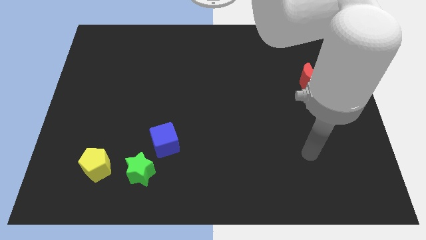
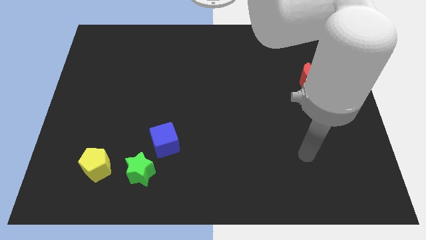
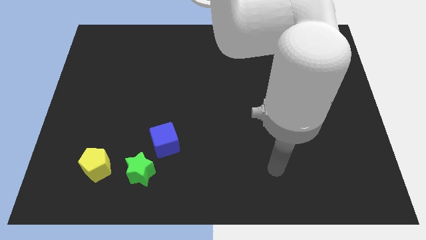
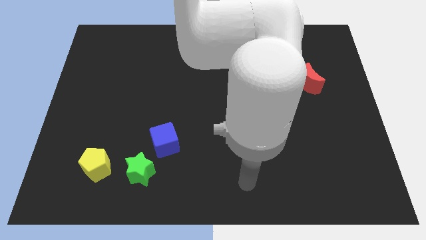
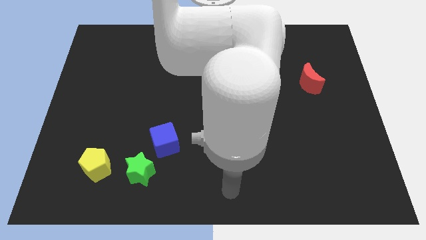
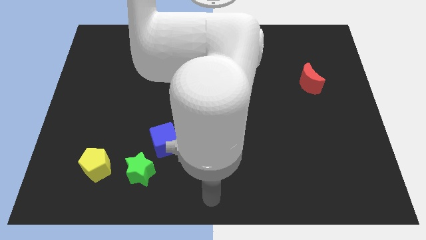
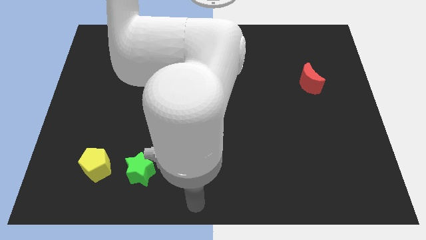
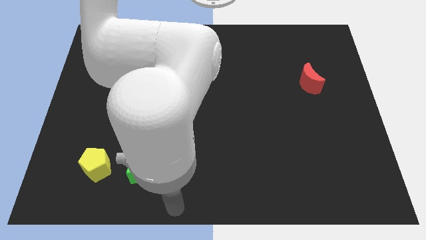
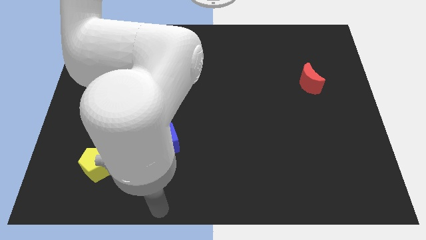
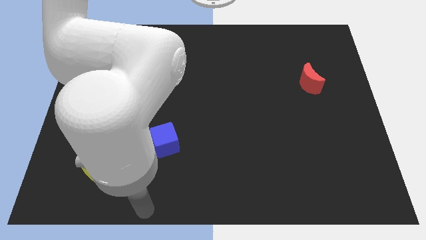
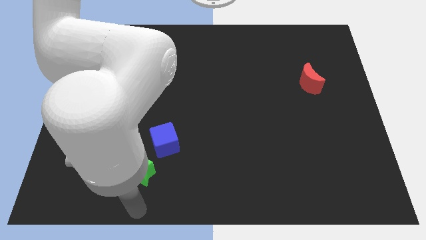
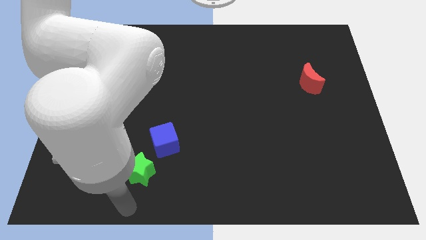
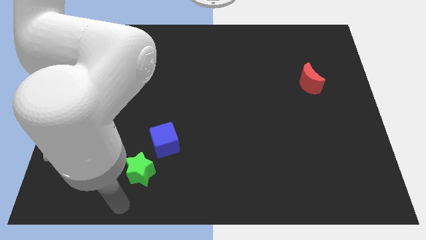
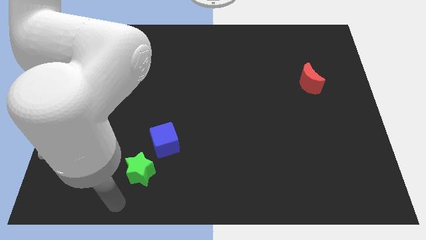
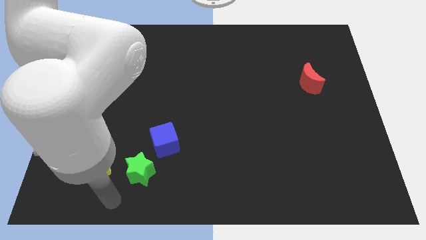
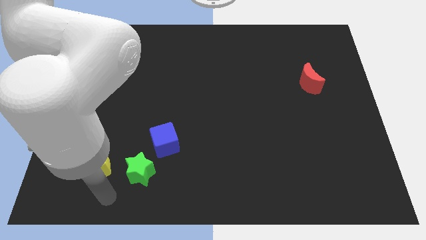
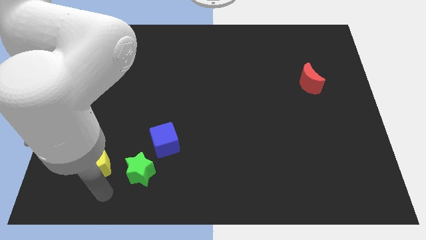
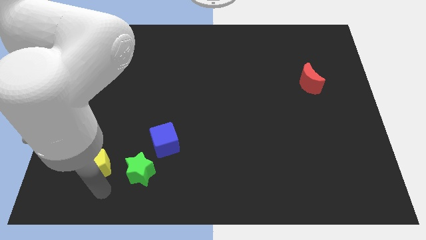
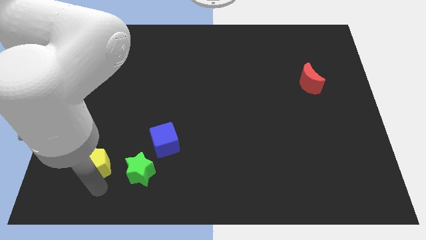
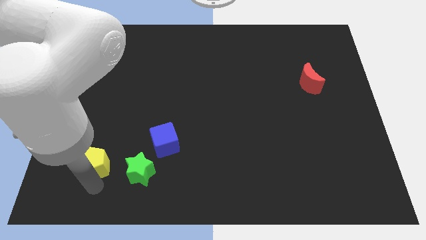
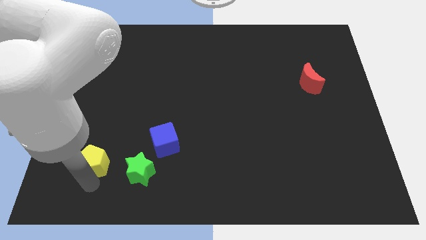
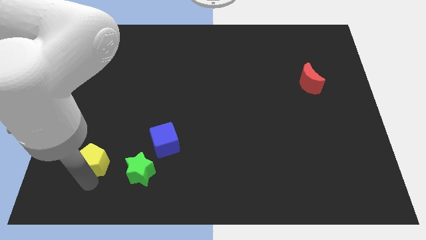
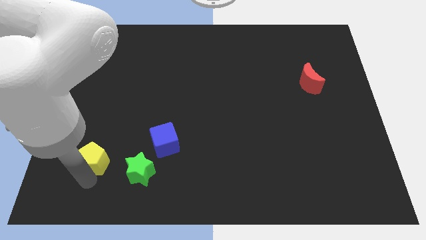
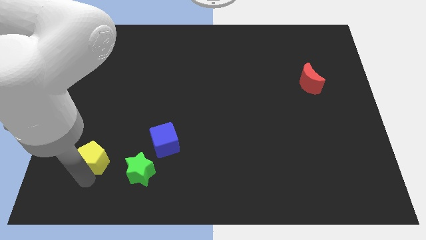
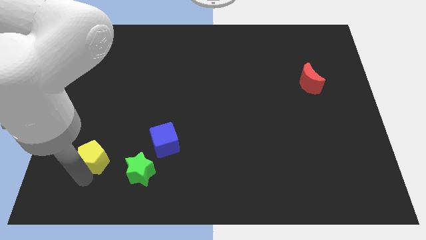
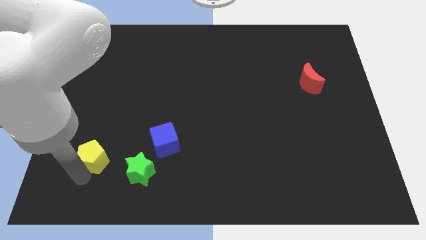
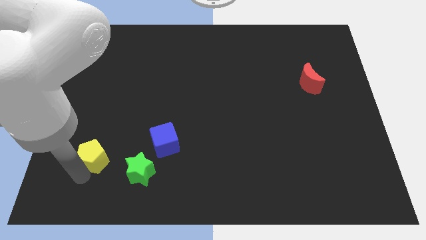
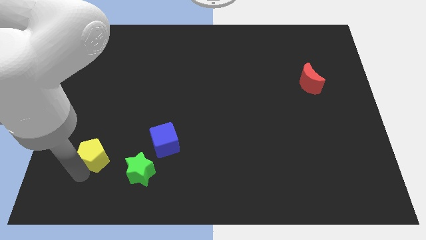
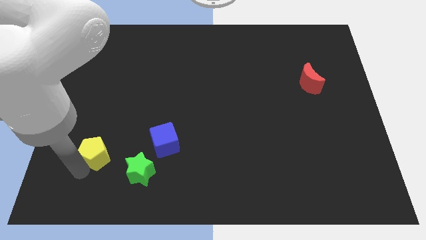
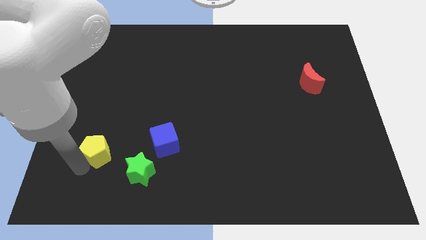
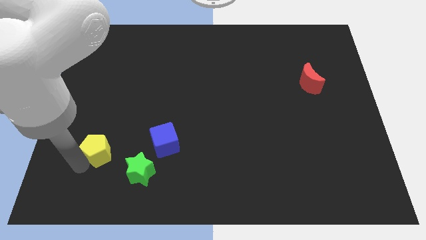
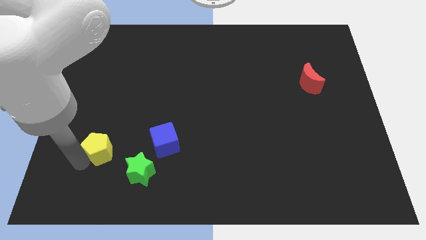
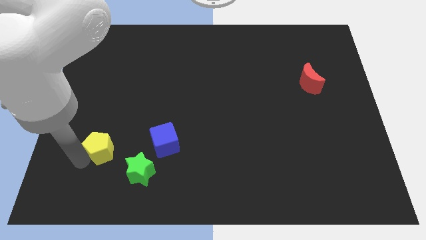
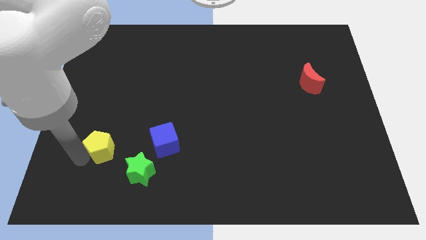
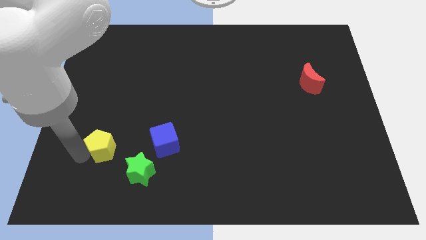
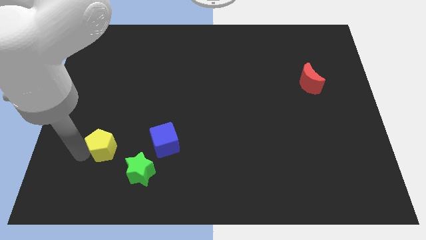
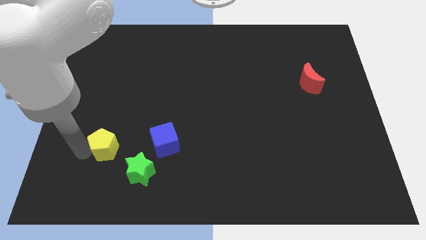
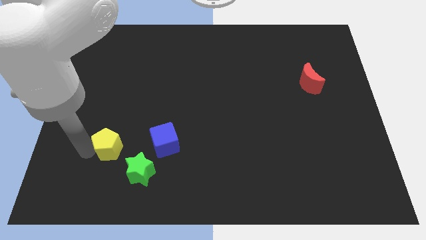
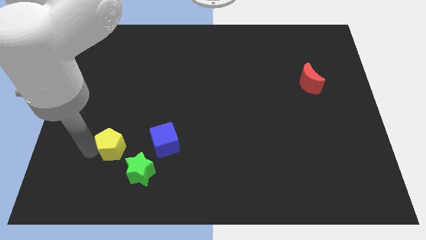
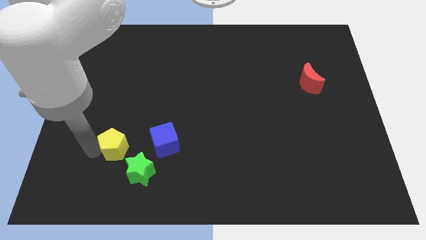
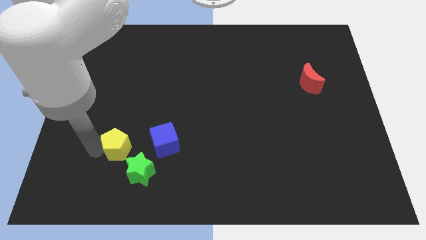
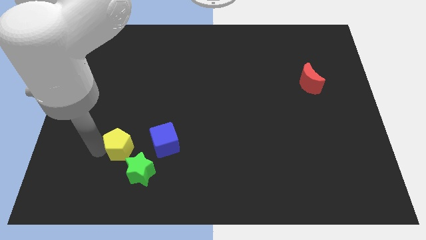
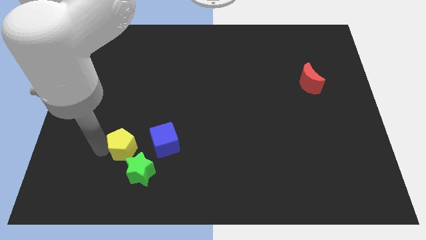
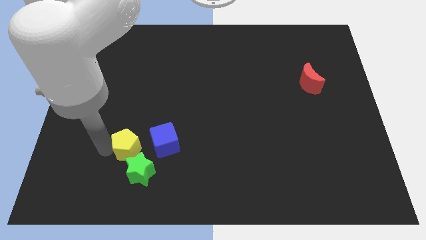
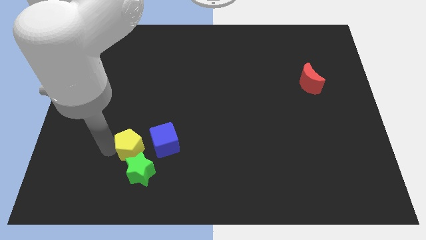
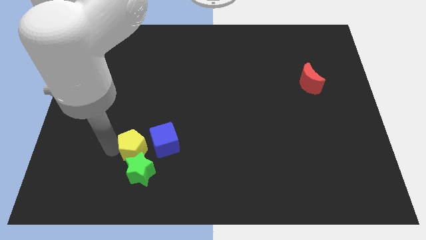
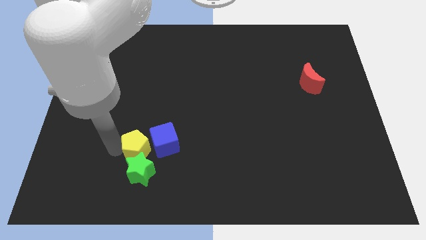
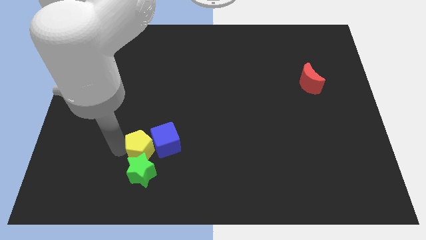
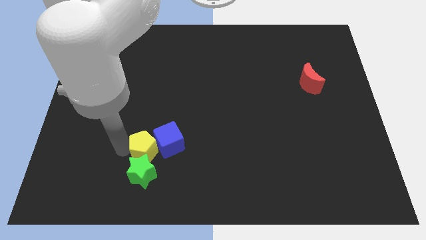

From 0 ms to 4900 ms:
slide the yellow block close to the blue cube

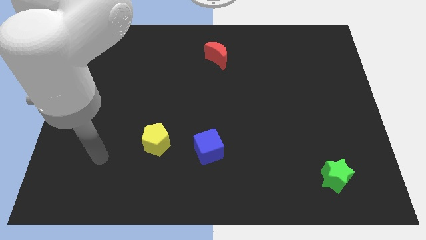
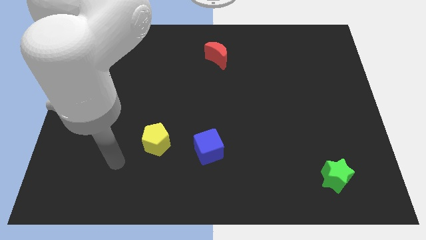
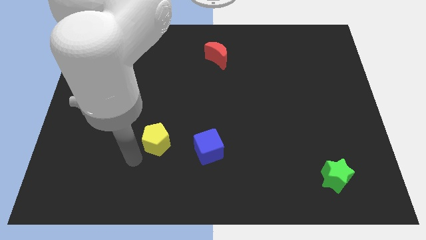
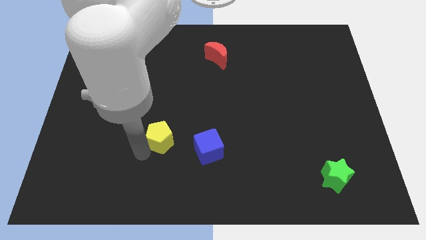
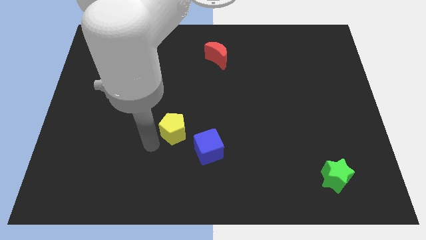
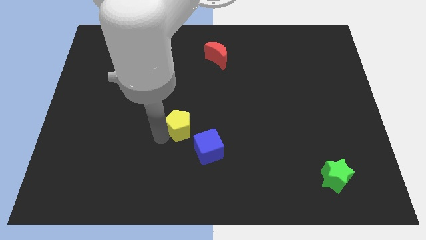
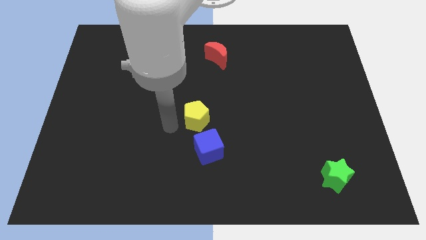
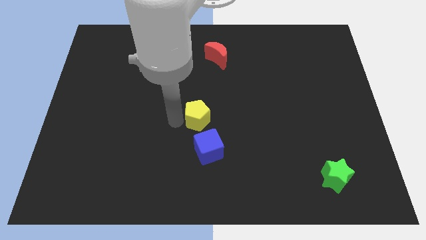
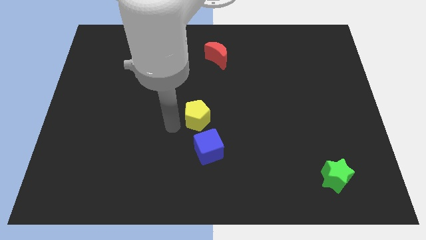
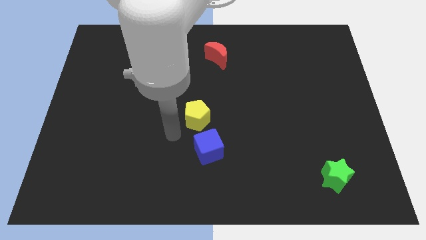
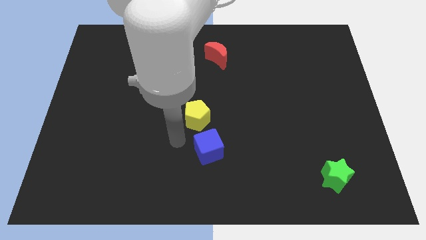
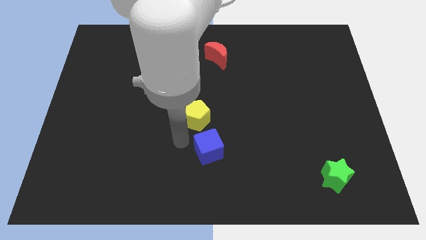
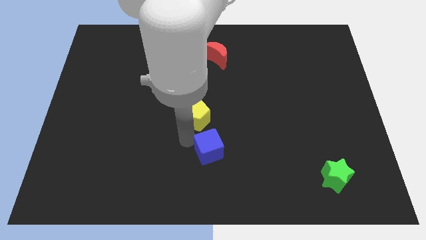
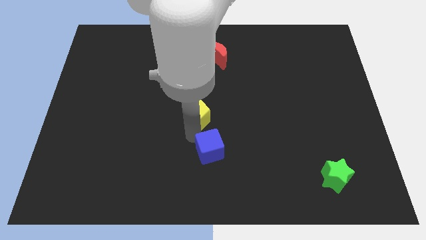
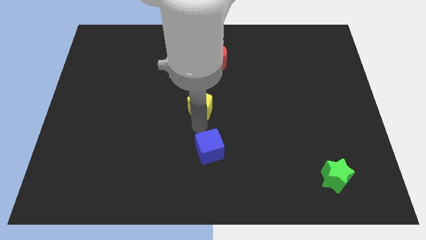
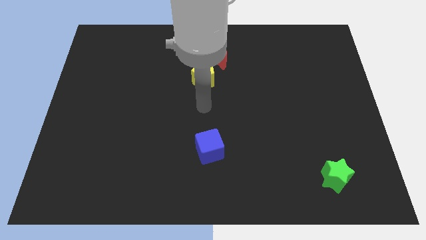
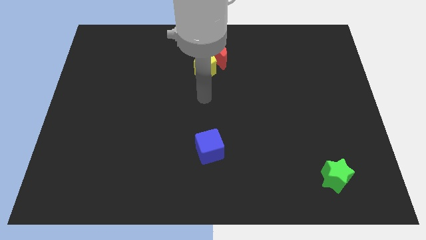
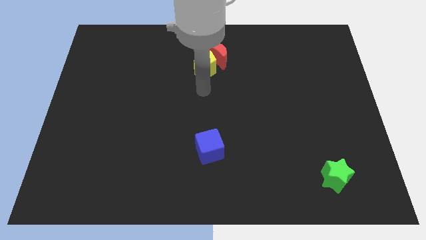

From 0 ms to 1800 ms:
slide the pentagon close to the red moon

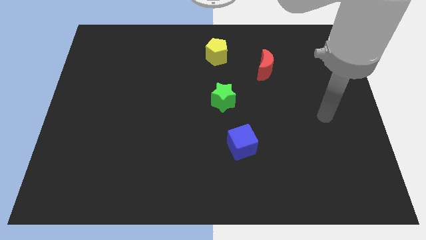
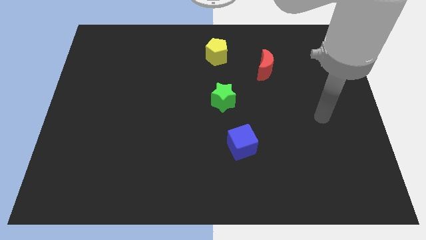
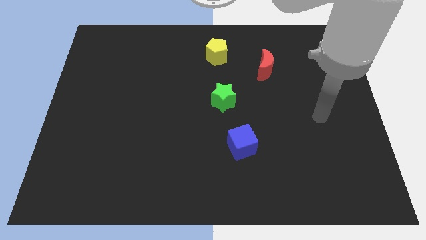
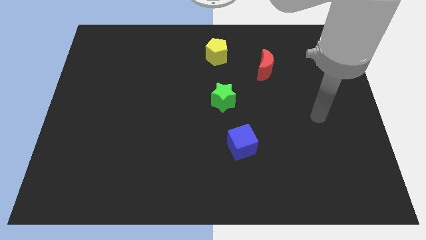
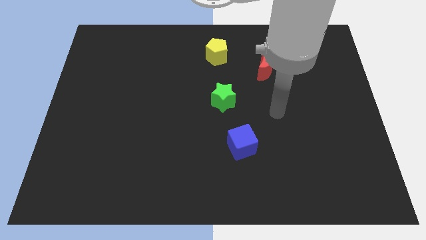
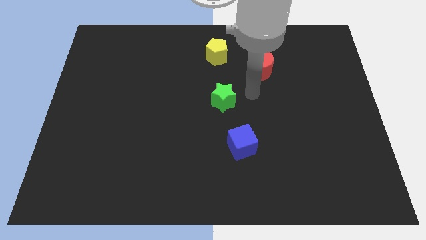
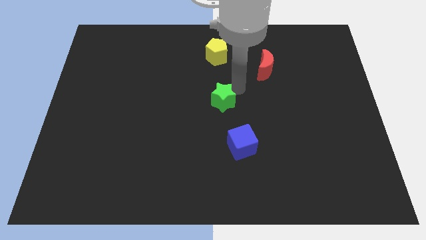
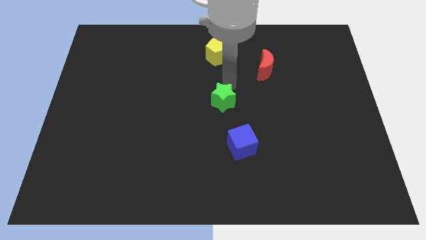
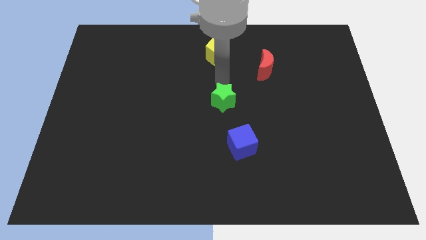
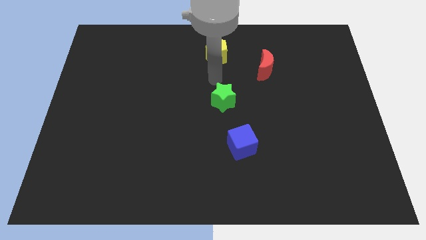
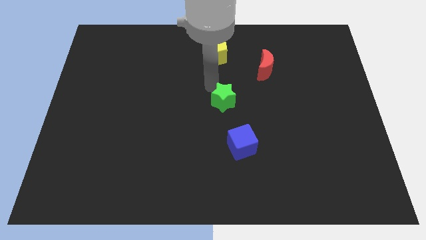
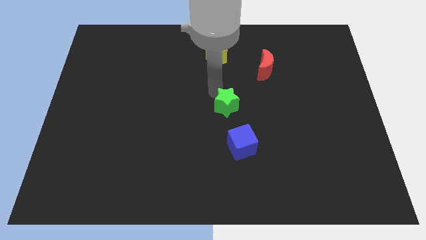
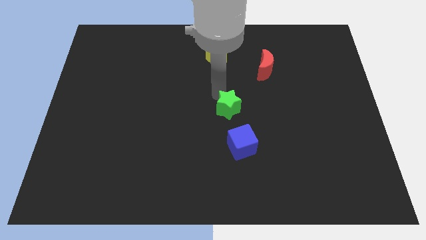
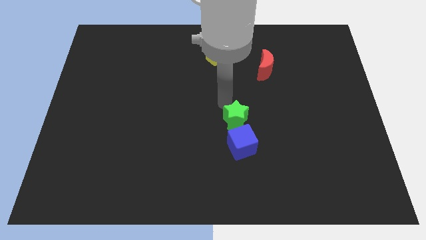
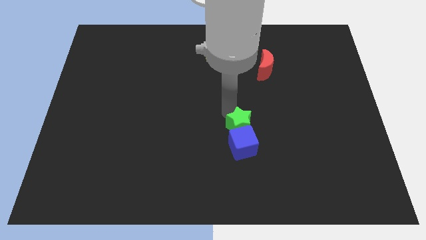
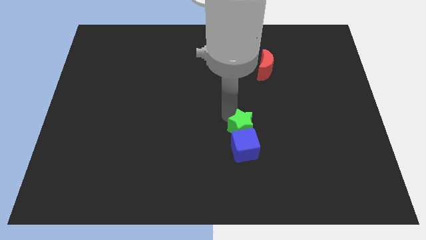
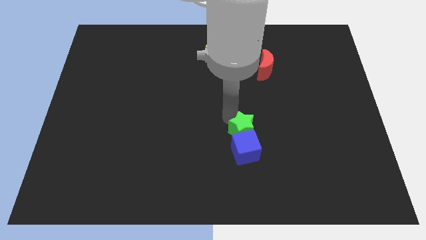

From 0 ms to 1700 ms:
push the green block next to the blue block

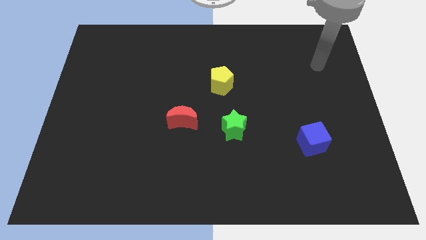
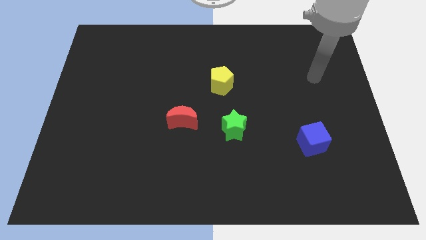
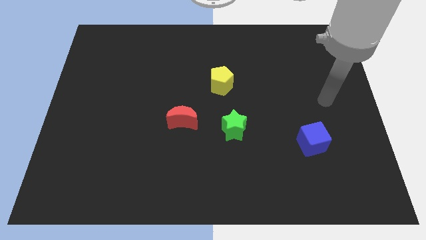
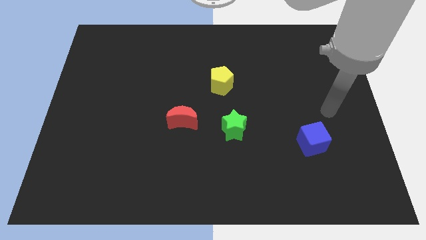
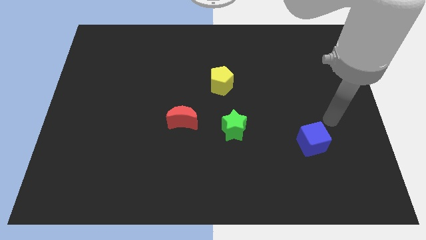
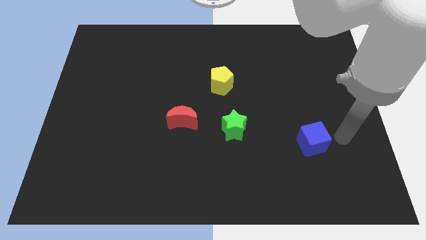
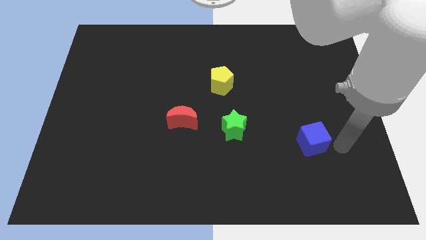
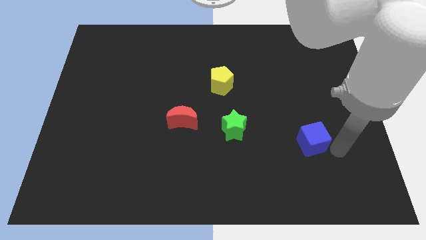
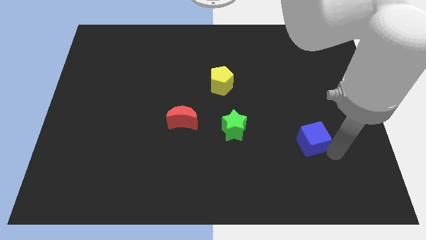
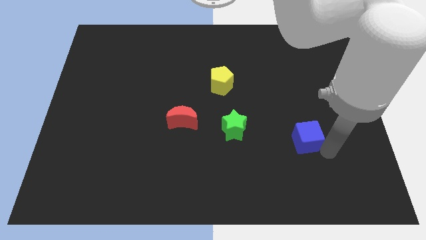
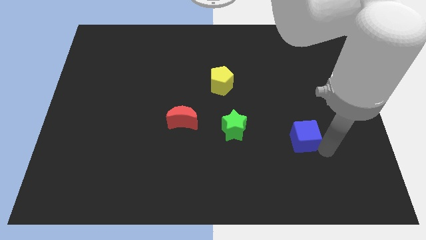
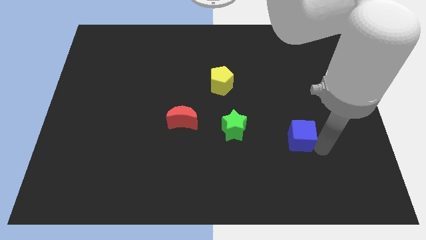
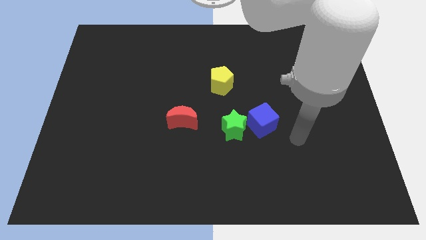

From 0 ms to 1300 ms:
slide the blue cube close to the green block
